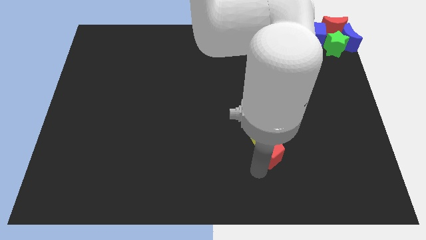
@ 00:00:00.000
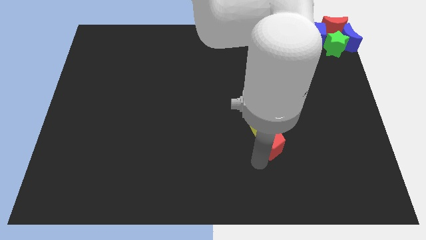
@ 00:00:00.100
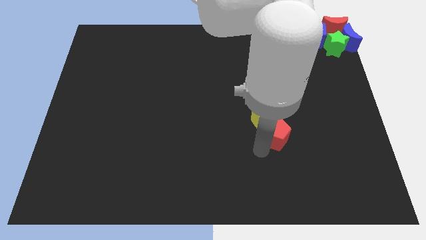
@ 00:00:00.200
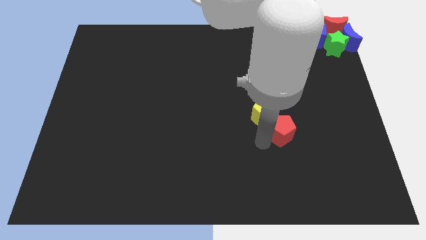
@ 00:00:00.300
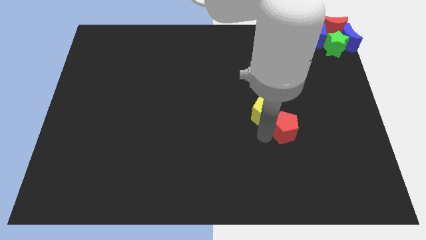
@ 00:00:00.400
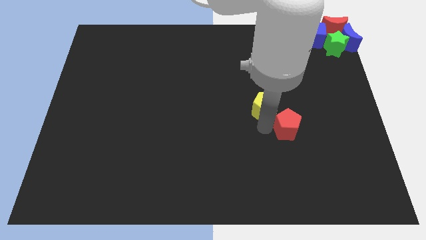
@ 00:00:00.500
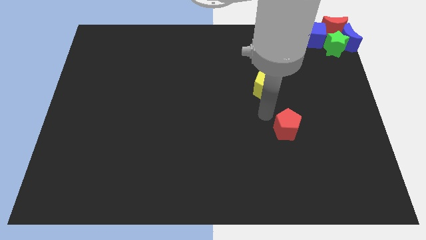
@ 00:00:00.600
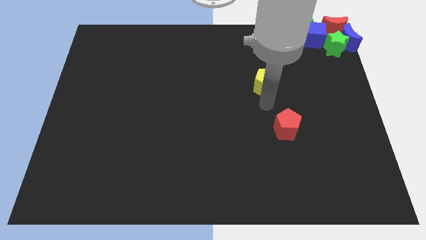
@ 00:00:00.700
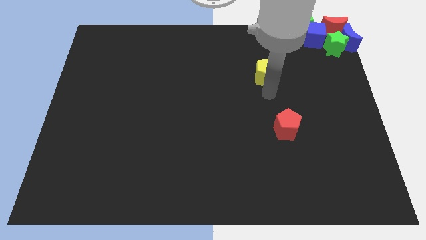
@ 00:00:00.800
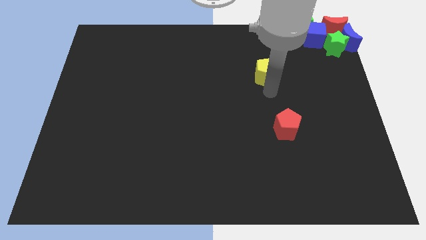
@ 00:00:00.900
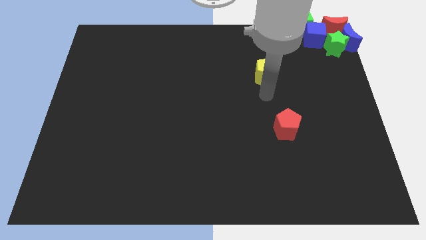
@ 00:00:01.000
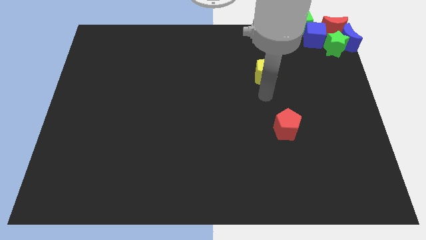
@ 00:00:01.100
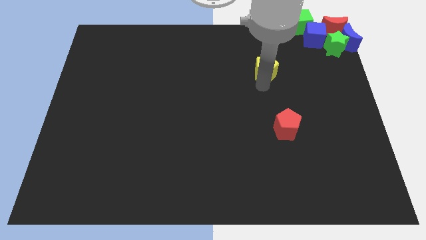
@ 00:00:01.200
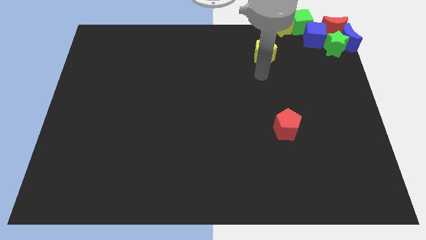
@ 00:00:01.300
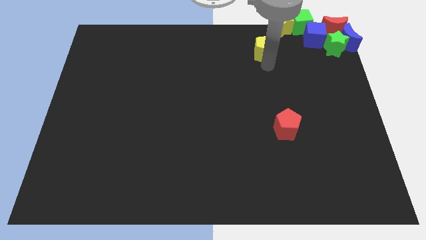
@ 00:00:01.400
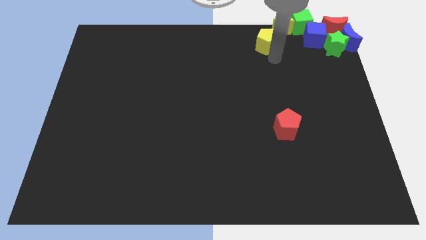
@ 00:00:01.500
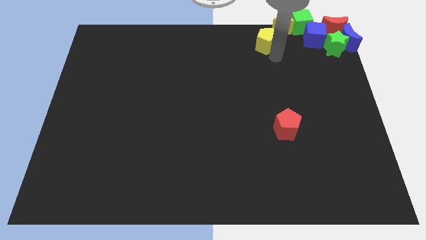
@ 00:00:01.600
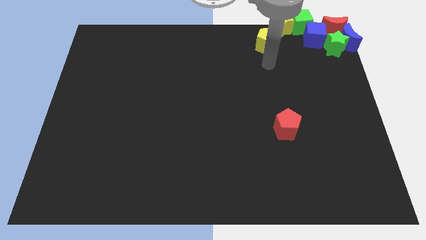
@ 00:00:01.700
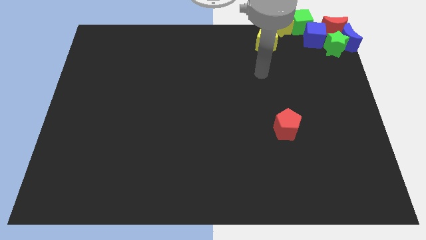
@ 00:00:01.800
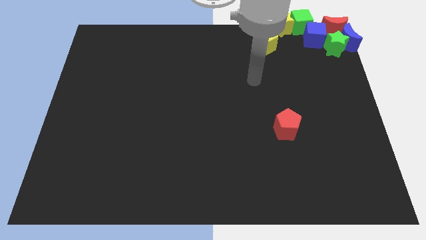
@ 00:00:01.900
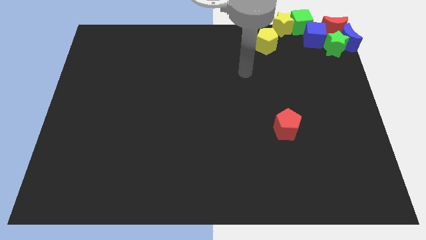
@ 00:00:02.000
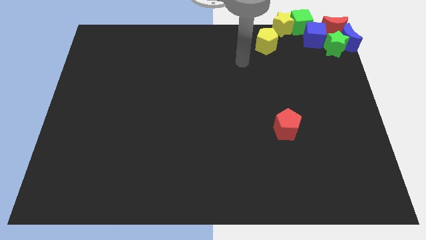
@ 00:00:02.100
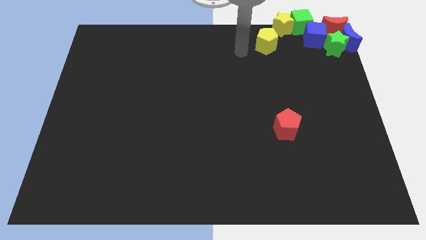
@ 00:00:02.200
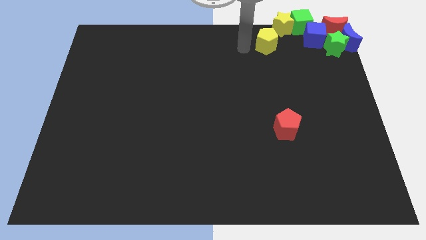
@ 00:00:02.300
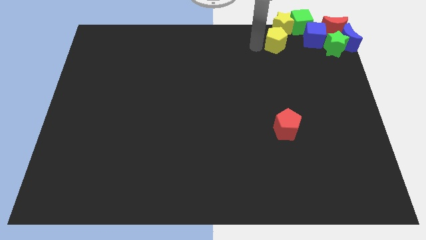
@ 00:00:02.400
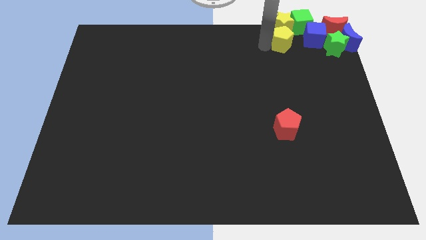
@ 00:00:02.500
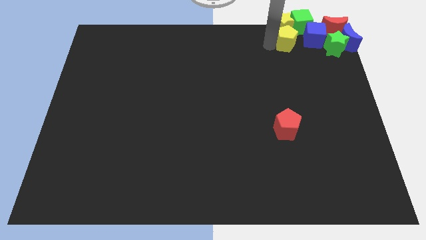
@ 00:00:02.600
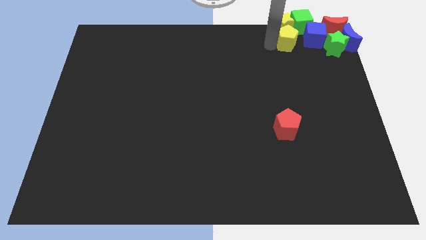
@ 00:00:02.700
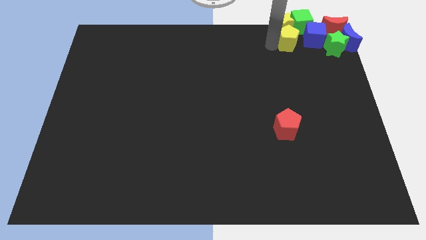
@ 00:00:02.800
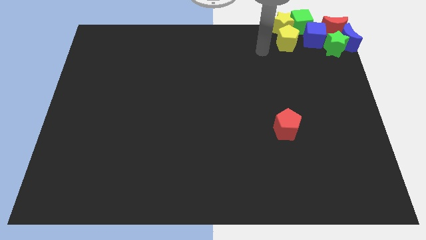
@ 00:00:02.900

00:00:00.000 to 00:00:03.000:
place yellow pentagon to the bottom of yellow star

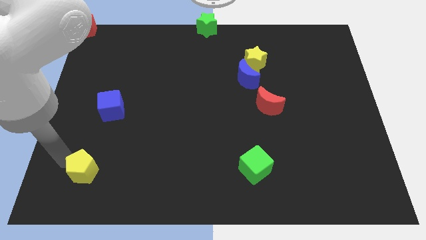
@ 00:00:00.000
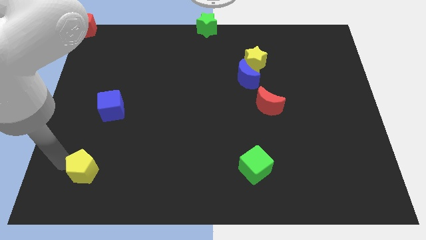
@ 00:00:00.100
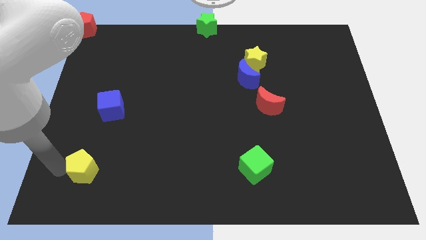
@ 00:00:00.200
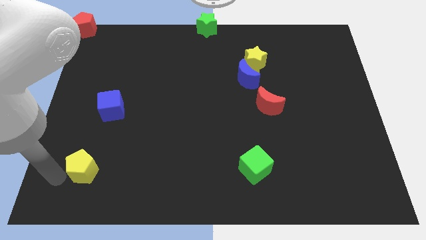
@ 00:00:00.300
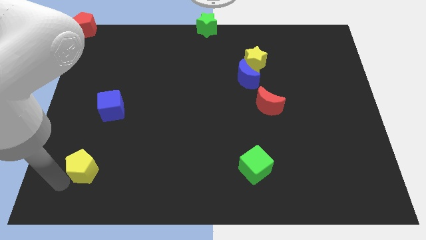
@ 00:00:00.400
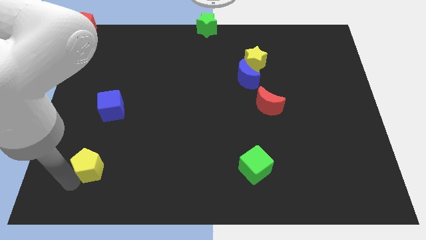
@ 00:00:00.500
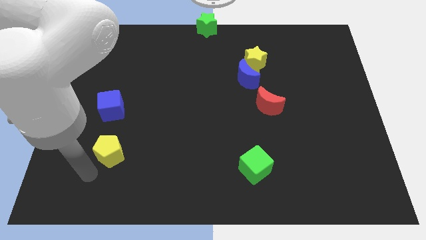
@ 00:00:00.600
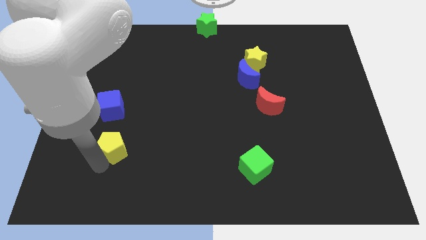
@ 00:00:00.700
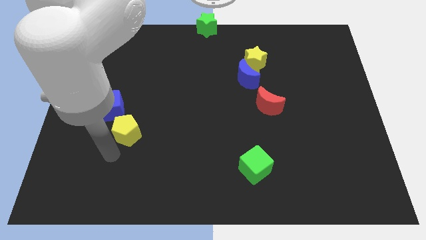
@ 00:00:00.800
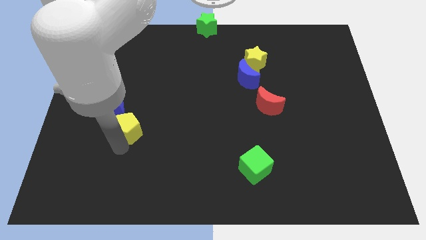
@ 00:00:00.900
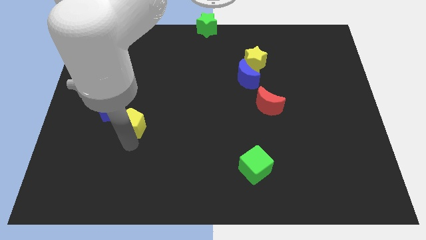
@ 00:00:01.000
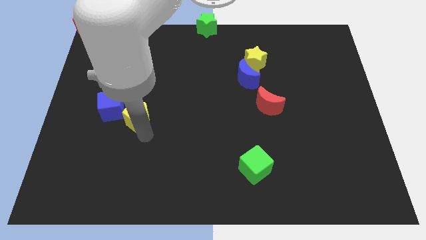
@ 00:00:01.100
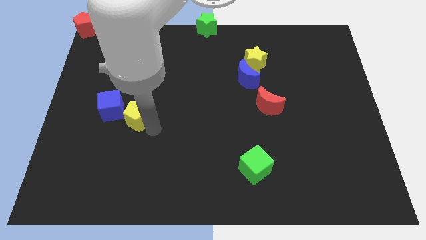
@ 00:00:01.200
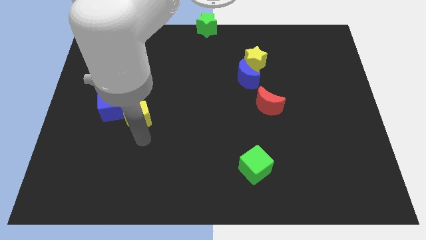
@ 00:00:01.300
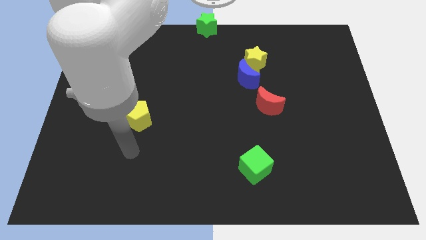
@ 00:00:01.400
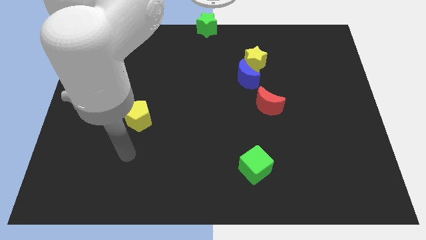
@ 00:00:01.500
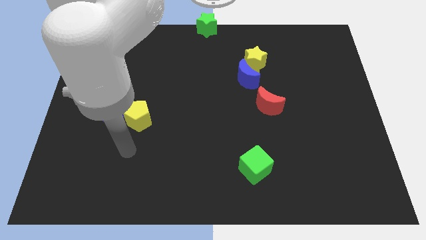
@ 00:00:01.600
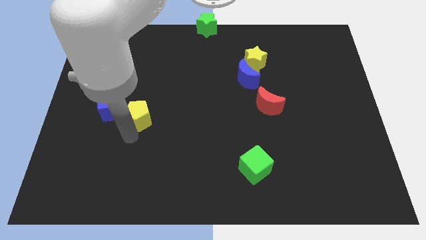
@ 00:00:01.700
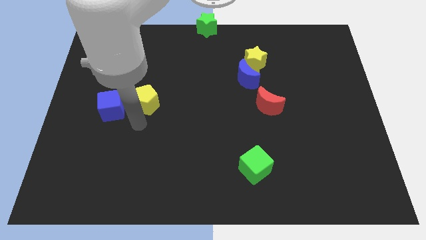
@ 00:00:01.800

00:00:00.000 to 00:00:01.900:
move the yellow pentagon right to the blue cube

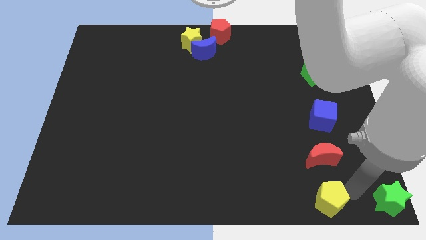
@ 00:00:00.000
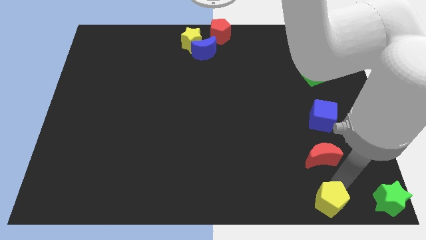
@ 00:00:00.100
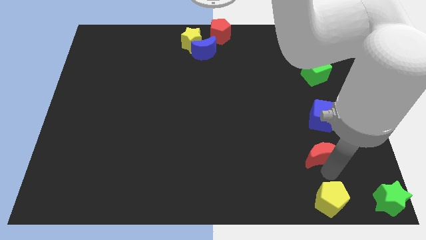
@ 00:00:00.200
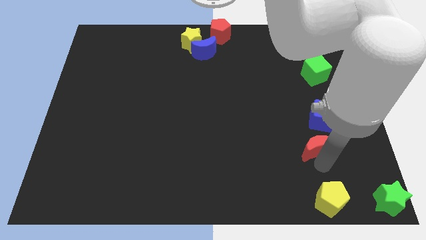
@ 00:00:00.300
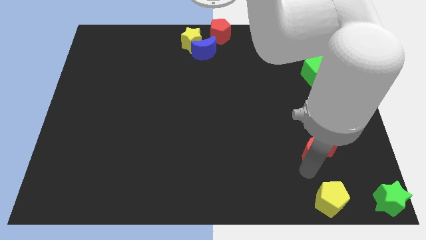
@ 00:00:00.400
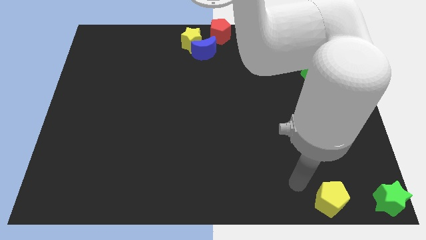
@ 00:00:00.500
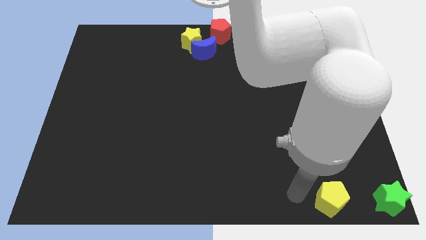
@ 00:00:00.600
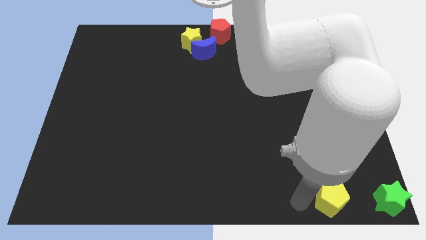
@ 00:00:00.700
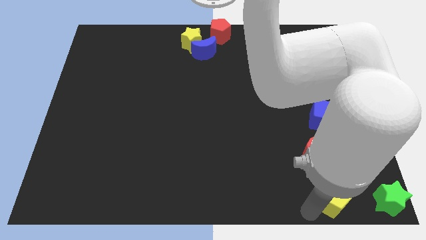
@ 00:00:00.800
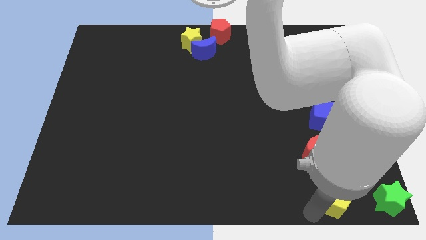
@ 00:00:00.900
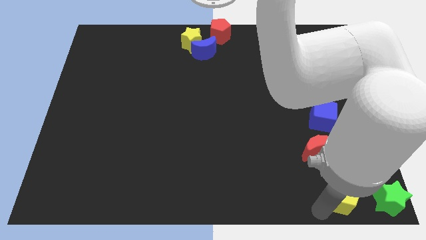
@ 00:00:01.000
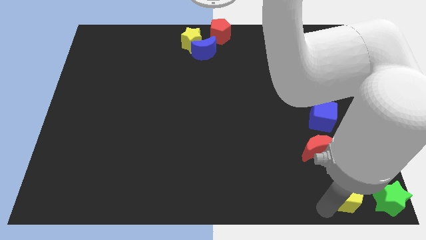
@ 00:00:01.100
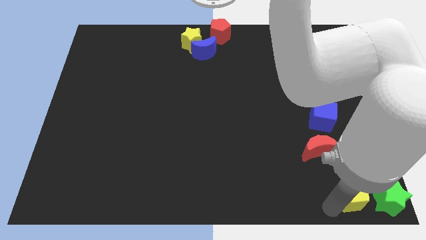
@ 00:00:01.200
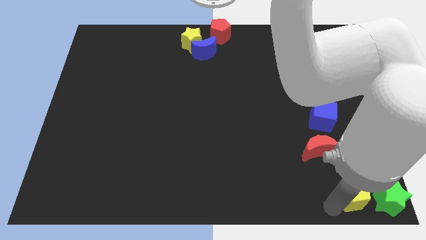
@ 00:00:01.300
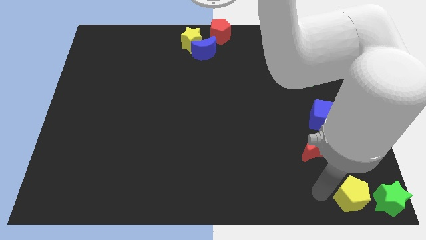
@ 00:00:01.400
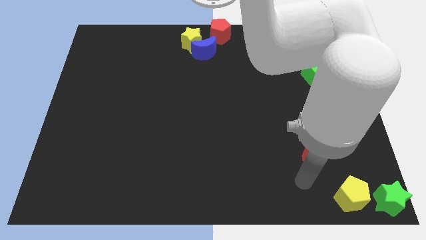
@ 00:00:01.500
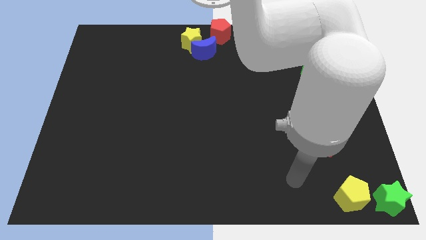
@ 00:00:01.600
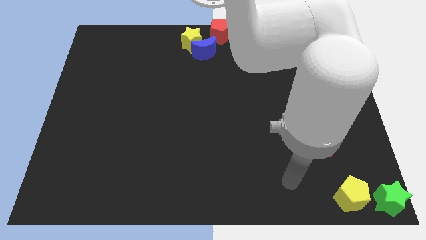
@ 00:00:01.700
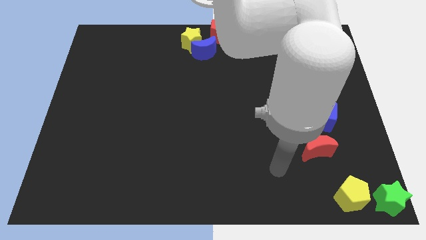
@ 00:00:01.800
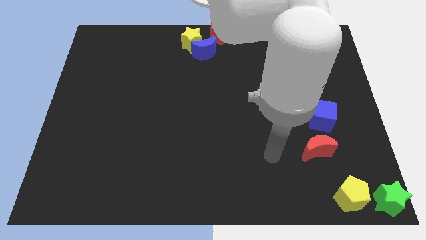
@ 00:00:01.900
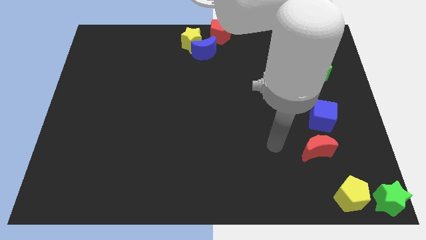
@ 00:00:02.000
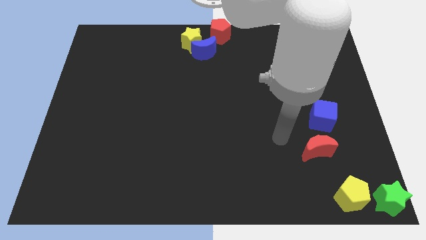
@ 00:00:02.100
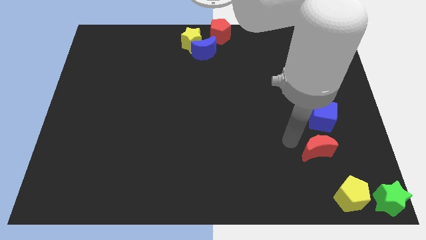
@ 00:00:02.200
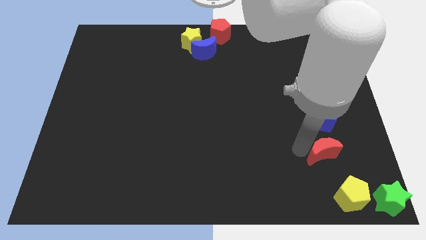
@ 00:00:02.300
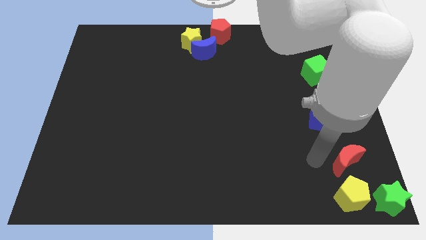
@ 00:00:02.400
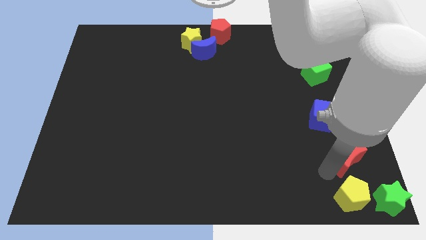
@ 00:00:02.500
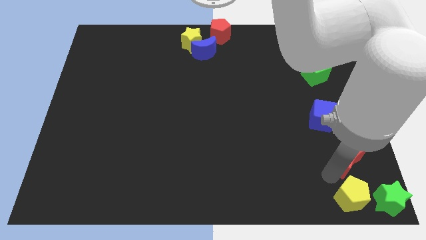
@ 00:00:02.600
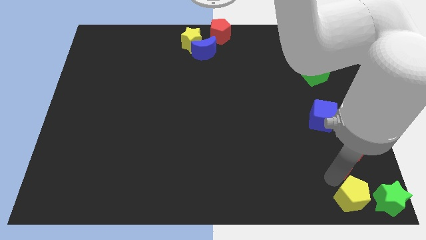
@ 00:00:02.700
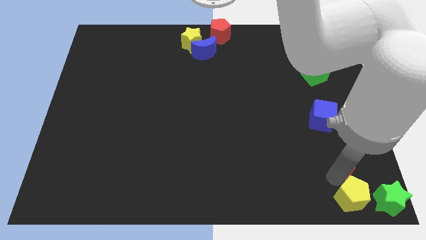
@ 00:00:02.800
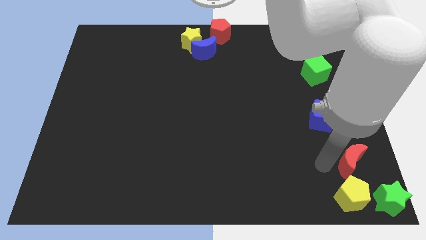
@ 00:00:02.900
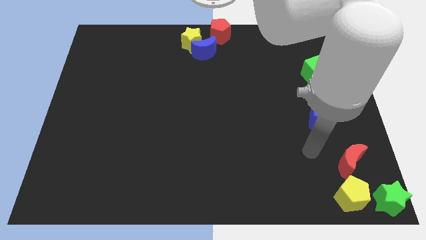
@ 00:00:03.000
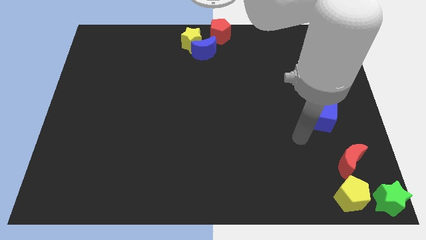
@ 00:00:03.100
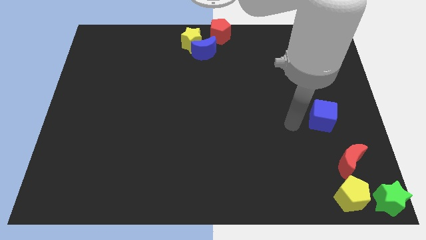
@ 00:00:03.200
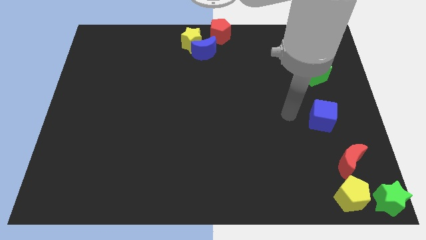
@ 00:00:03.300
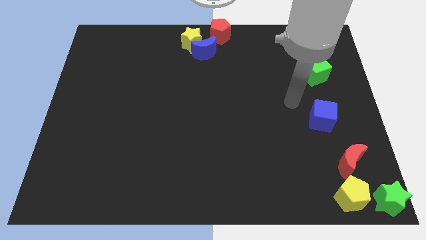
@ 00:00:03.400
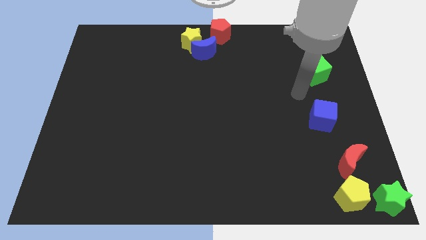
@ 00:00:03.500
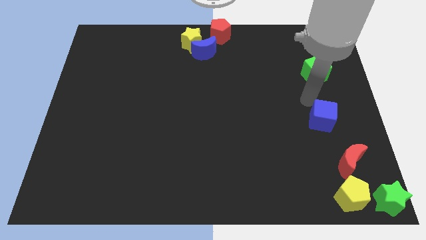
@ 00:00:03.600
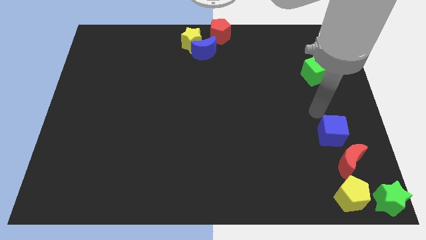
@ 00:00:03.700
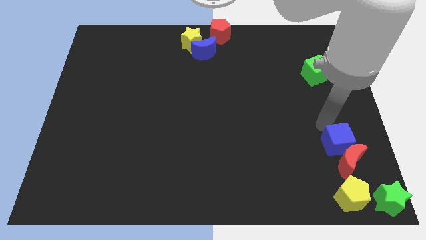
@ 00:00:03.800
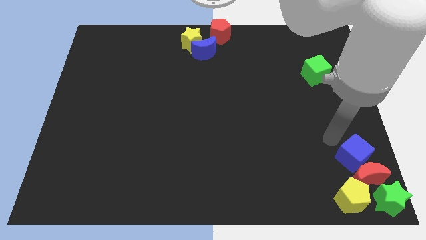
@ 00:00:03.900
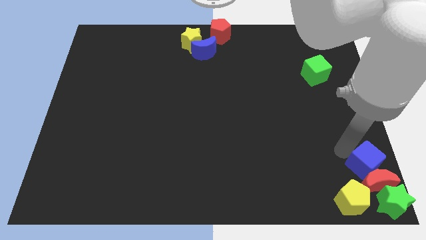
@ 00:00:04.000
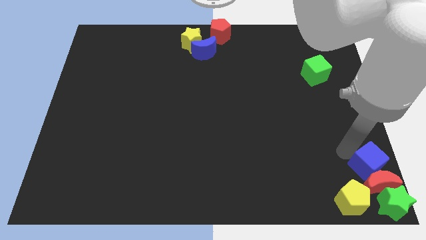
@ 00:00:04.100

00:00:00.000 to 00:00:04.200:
push the group of objects to the right bottom of the board
